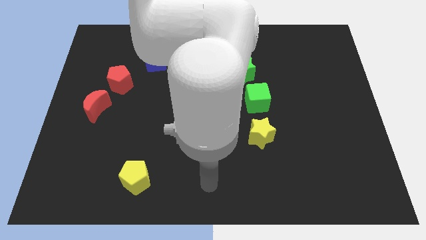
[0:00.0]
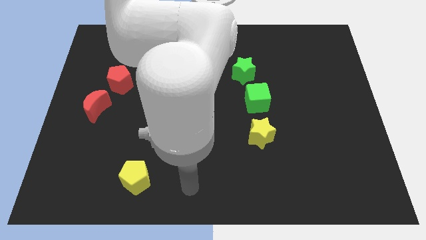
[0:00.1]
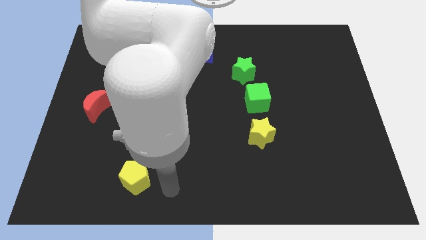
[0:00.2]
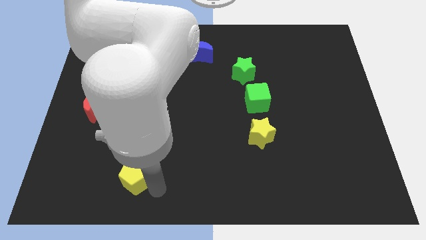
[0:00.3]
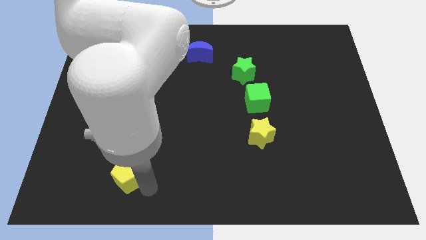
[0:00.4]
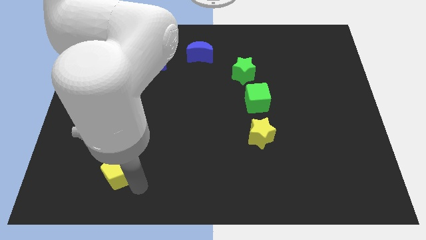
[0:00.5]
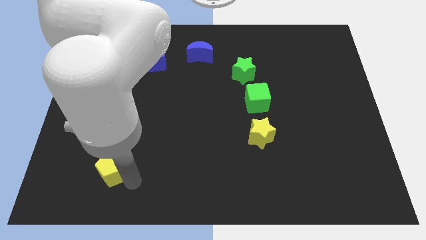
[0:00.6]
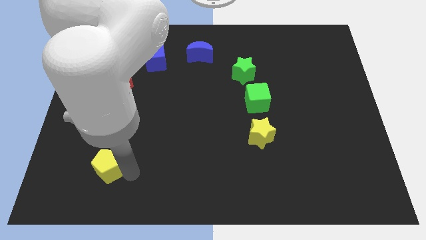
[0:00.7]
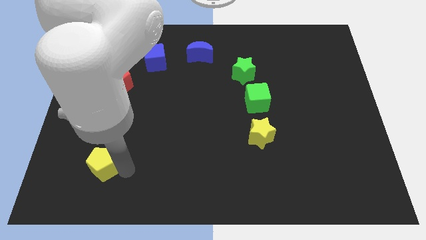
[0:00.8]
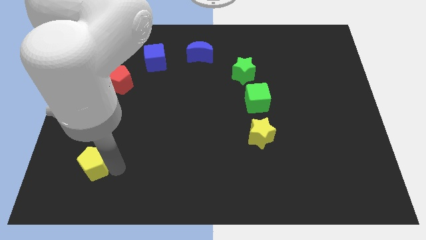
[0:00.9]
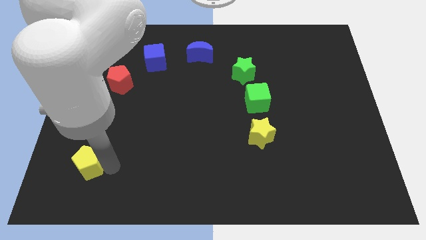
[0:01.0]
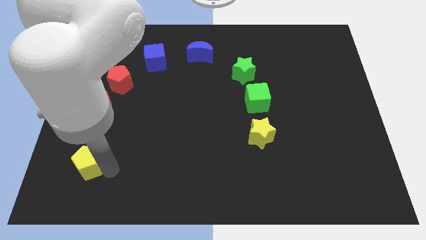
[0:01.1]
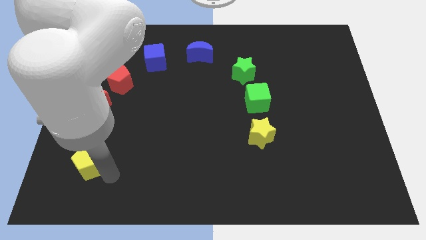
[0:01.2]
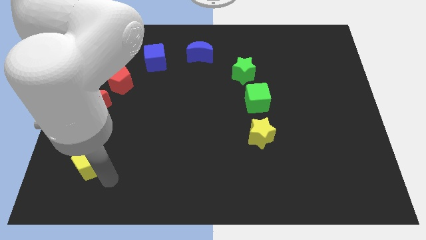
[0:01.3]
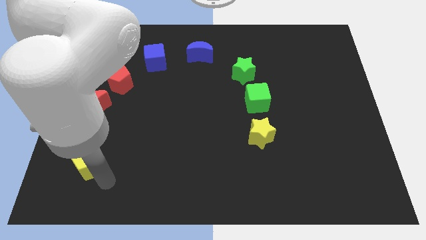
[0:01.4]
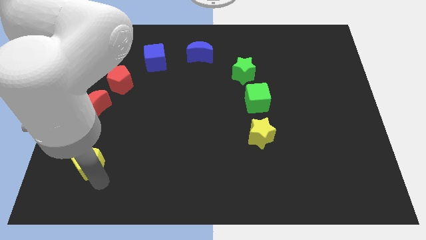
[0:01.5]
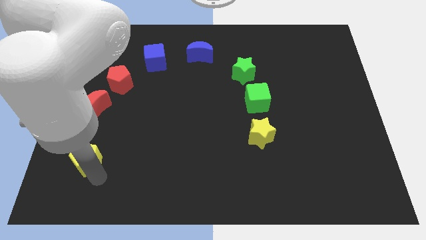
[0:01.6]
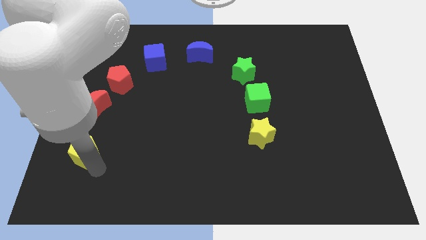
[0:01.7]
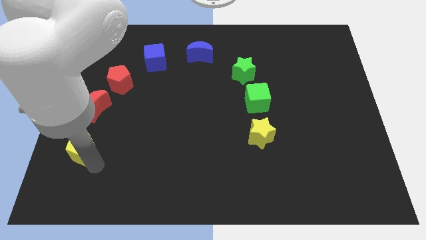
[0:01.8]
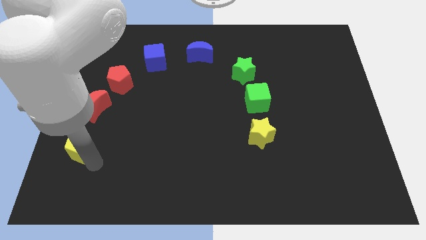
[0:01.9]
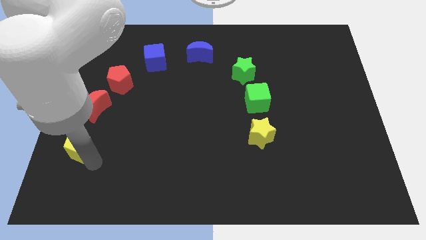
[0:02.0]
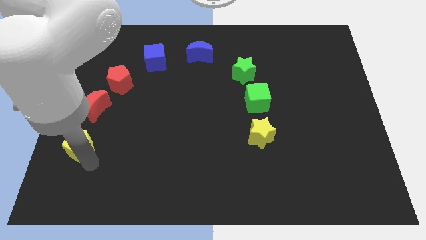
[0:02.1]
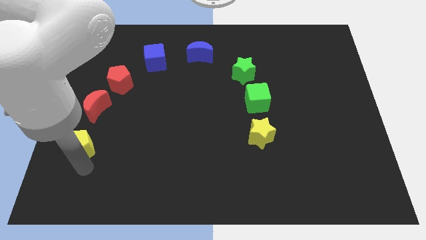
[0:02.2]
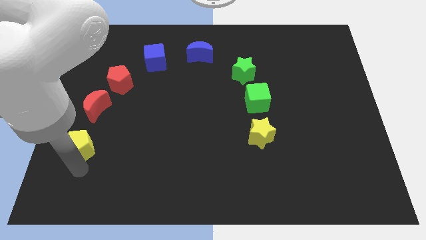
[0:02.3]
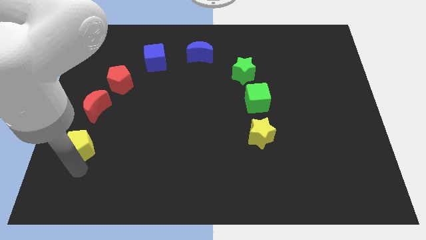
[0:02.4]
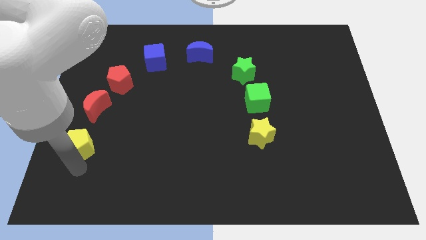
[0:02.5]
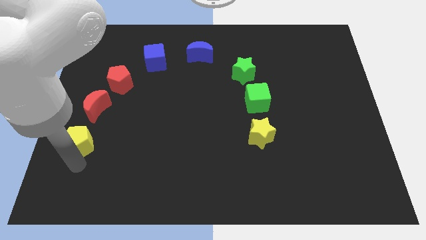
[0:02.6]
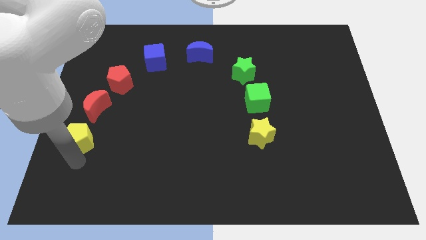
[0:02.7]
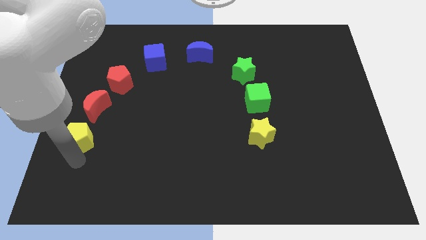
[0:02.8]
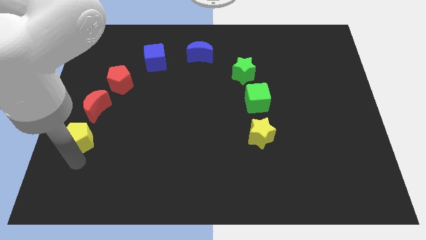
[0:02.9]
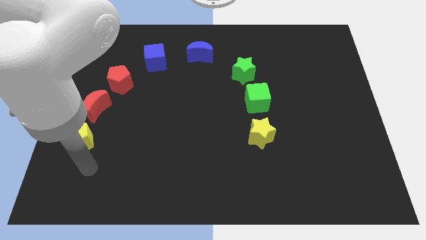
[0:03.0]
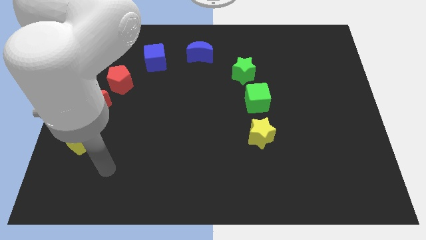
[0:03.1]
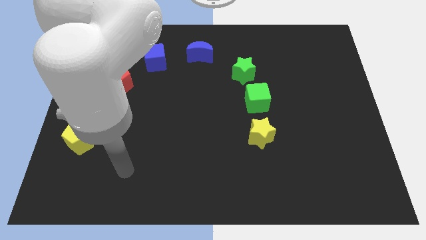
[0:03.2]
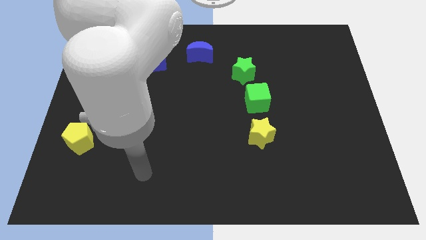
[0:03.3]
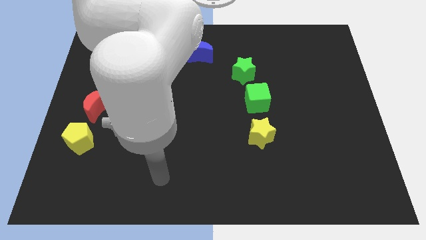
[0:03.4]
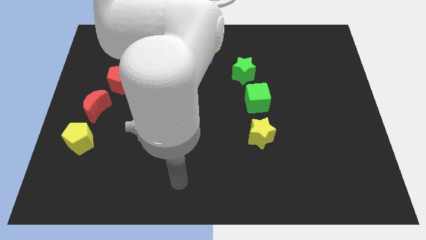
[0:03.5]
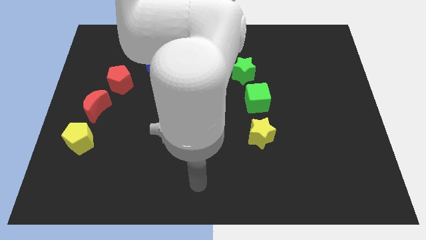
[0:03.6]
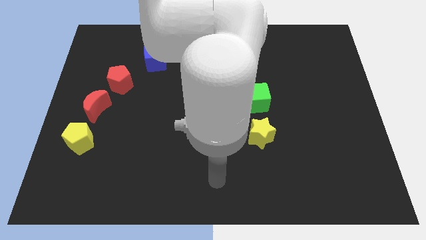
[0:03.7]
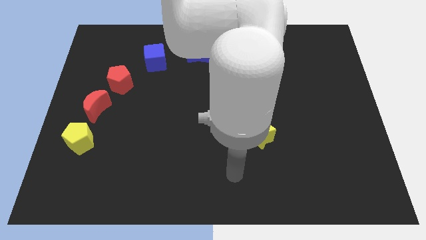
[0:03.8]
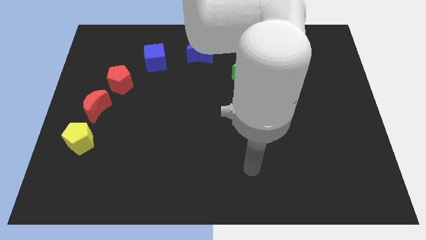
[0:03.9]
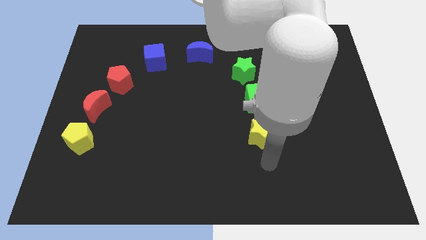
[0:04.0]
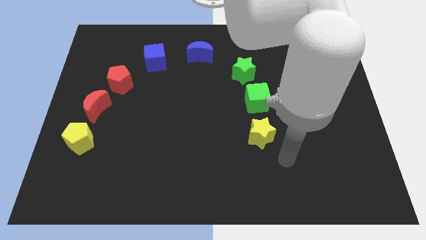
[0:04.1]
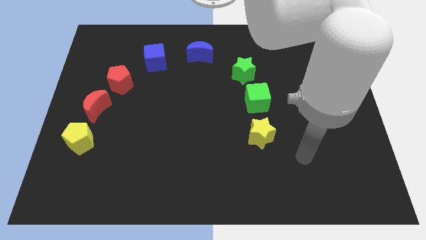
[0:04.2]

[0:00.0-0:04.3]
place yellow pentagon down to the red crescent

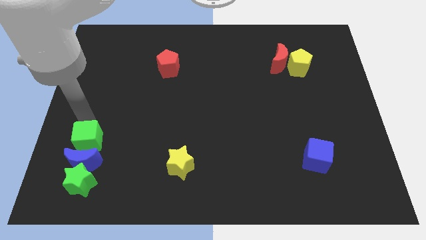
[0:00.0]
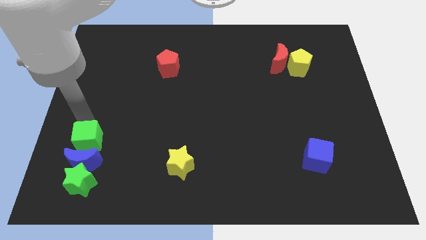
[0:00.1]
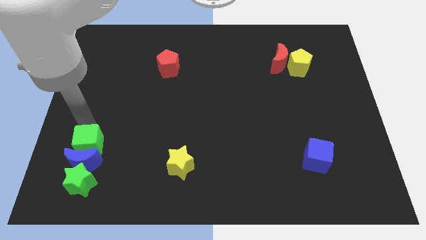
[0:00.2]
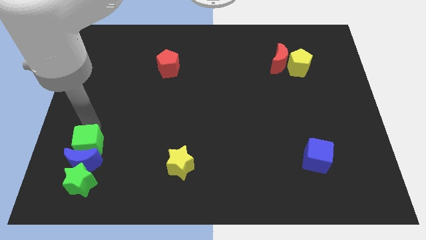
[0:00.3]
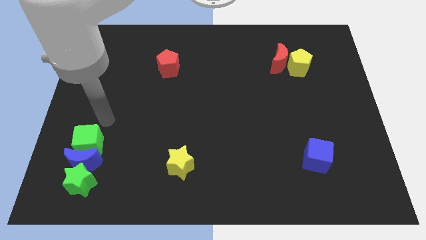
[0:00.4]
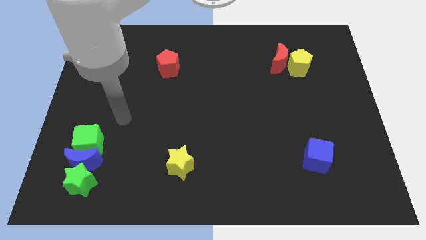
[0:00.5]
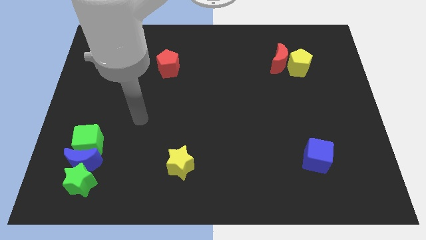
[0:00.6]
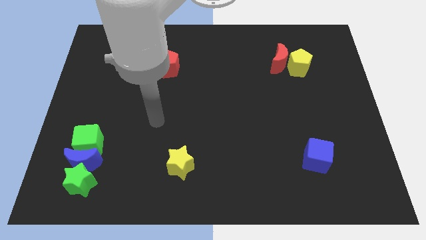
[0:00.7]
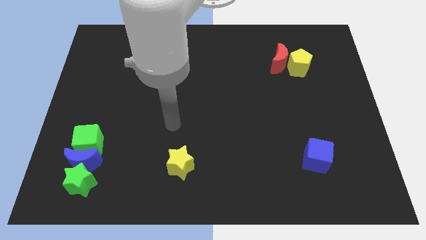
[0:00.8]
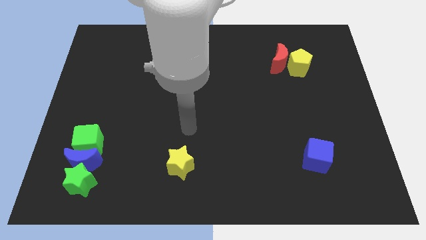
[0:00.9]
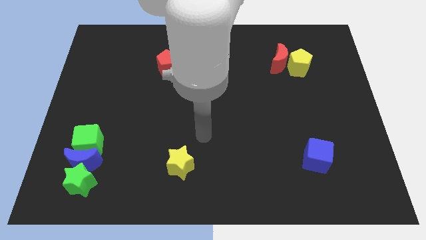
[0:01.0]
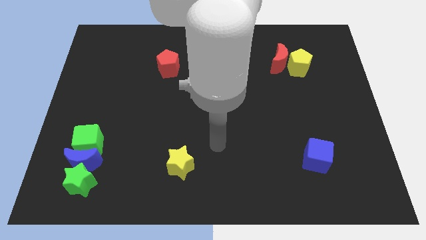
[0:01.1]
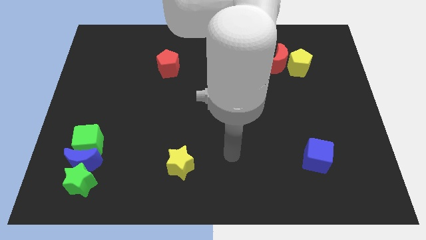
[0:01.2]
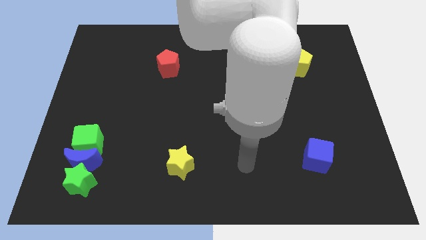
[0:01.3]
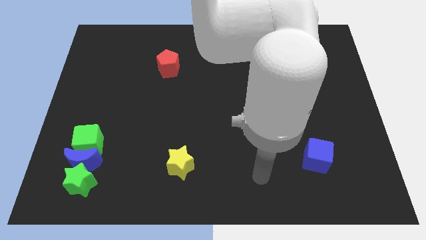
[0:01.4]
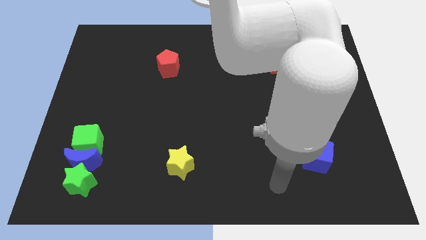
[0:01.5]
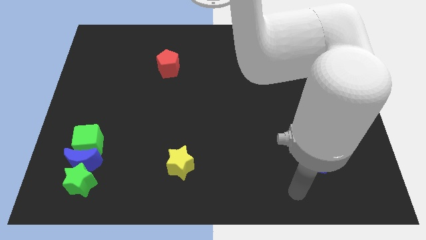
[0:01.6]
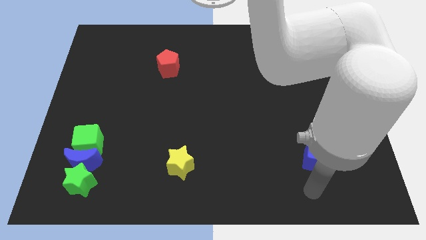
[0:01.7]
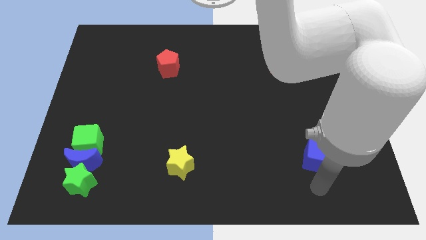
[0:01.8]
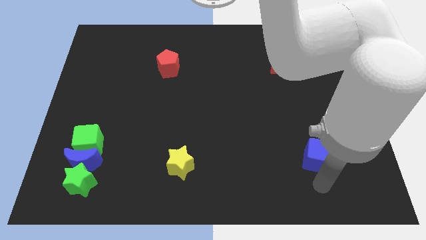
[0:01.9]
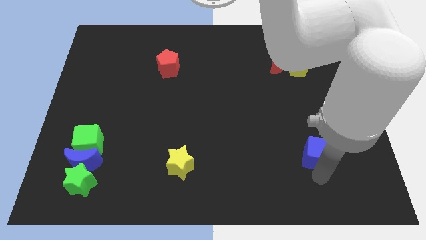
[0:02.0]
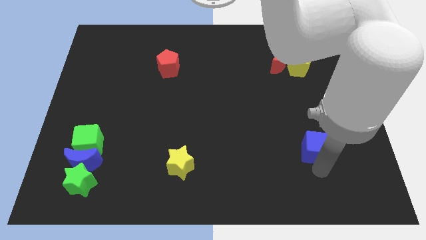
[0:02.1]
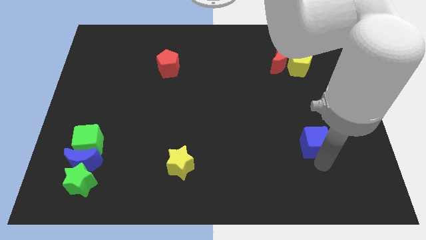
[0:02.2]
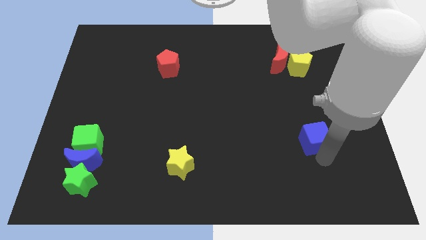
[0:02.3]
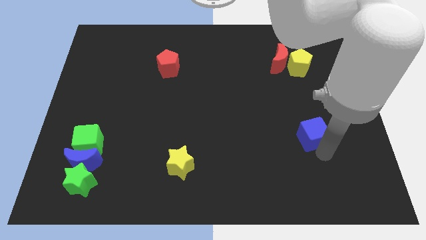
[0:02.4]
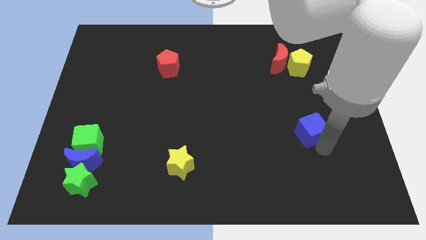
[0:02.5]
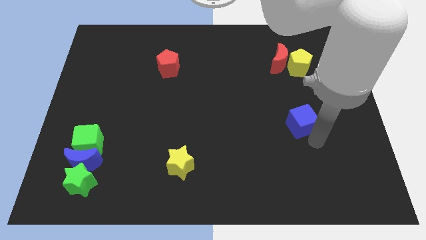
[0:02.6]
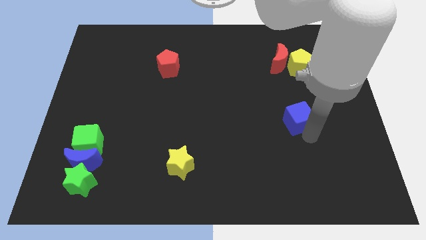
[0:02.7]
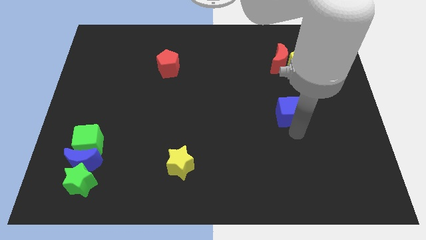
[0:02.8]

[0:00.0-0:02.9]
move the arm away from the green cube

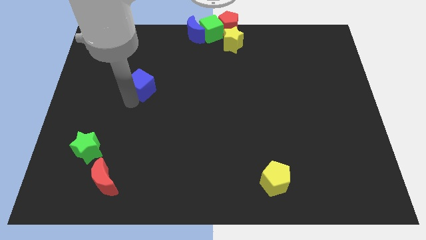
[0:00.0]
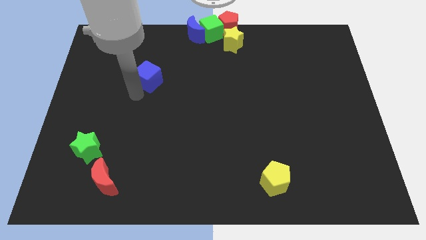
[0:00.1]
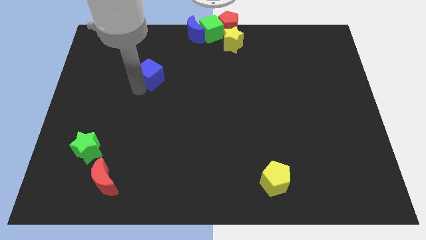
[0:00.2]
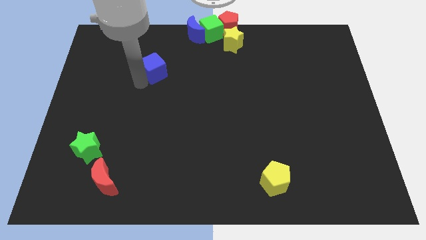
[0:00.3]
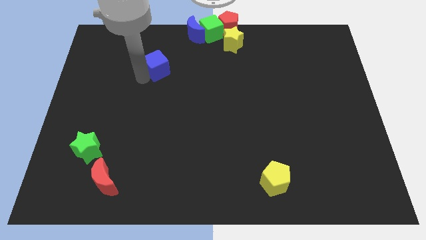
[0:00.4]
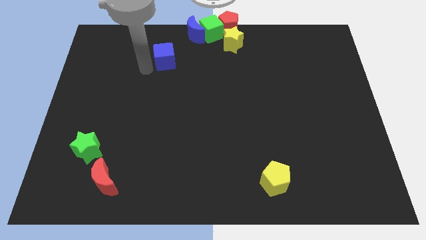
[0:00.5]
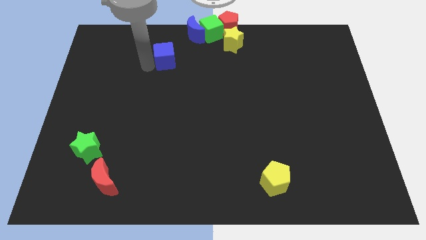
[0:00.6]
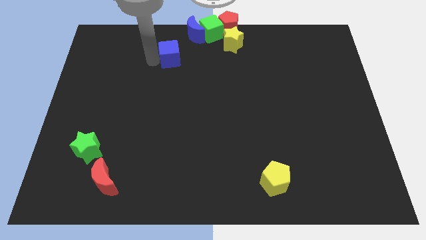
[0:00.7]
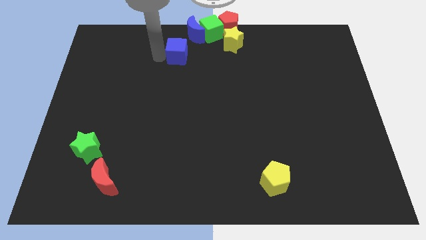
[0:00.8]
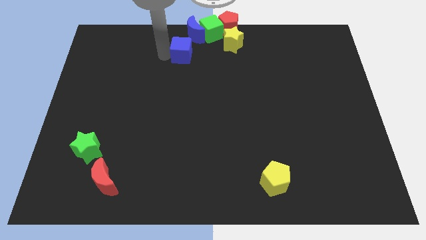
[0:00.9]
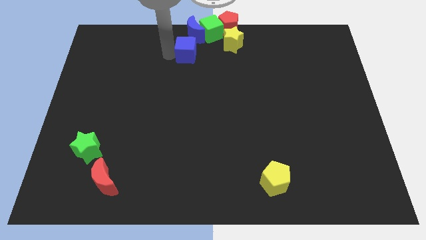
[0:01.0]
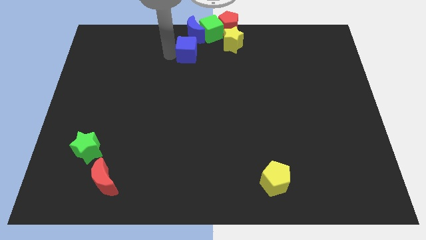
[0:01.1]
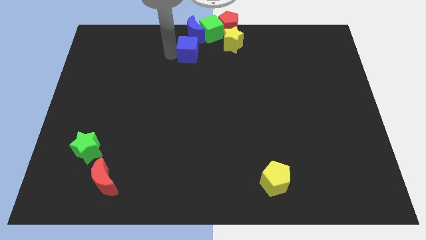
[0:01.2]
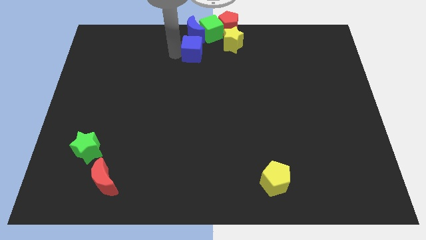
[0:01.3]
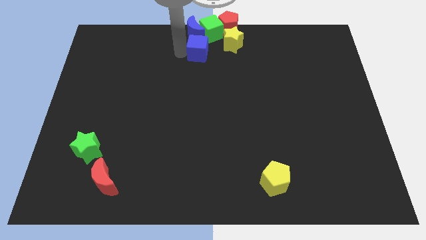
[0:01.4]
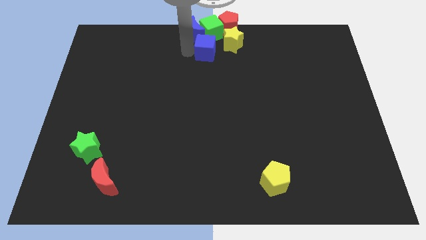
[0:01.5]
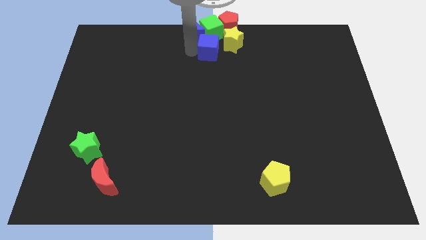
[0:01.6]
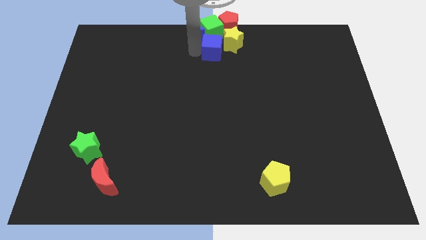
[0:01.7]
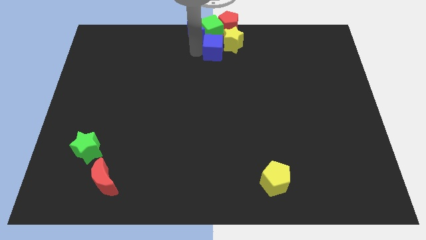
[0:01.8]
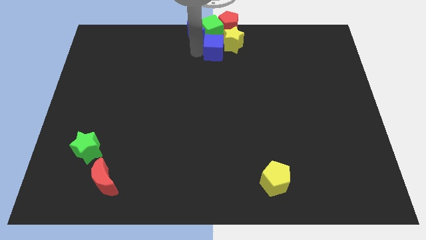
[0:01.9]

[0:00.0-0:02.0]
place the blue cube below the green cube
